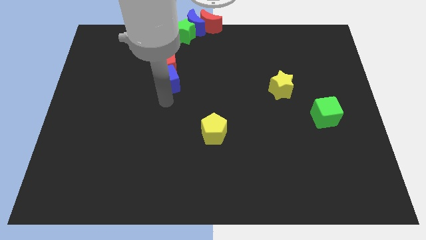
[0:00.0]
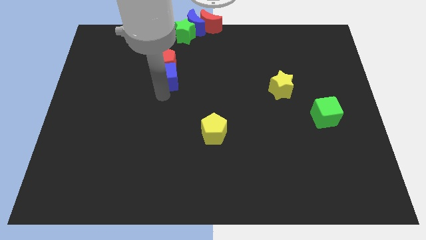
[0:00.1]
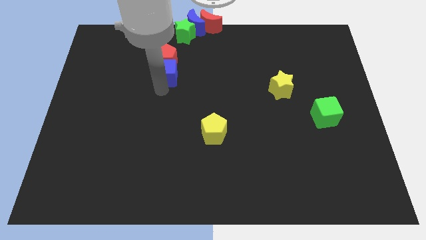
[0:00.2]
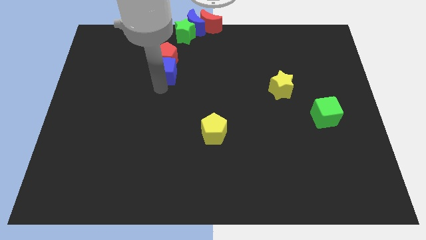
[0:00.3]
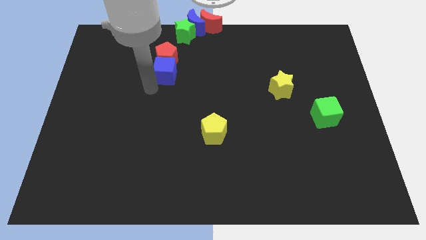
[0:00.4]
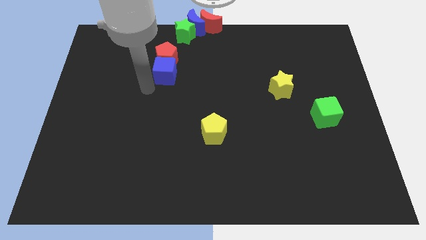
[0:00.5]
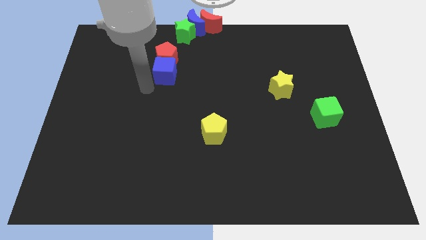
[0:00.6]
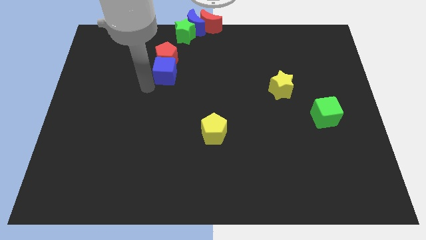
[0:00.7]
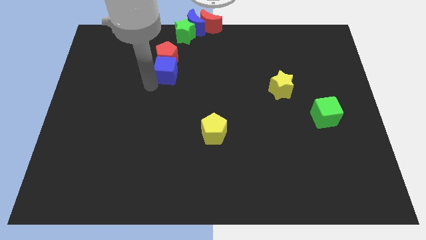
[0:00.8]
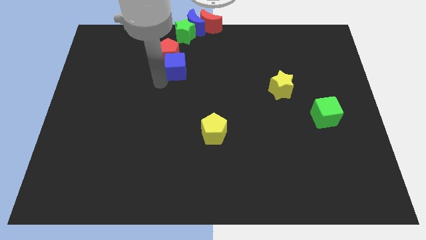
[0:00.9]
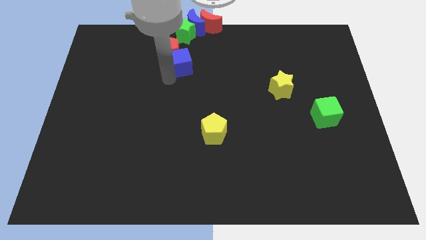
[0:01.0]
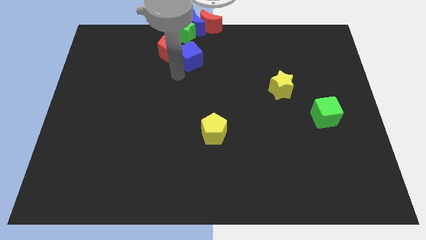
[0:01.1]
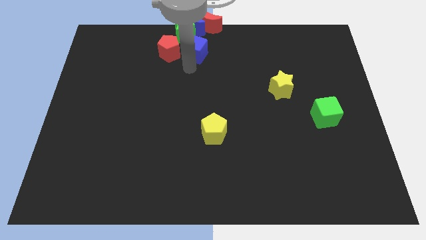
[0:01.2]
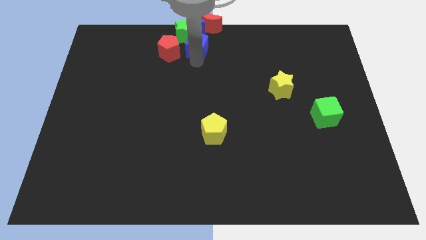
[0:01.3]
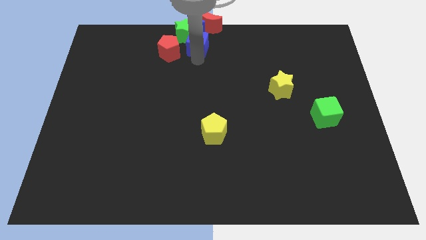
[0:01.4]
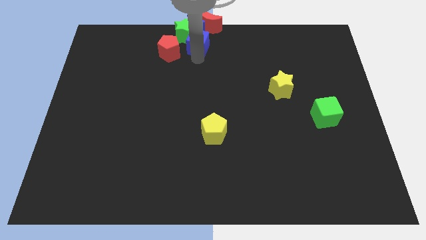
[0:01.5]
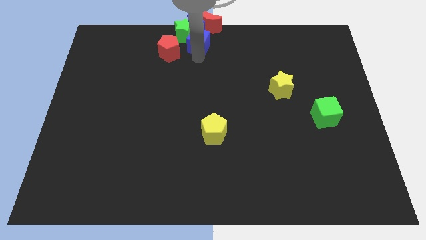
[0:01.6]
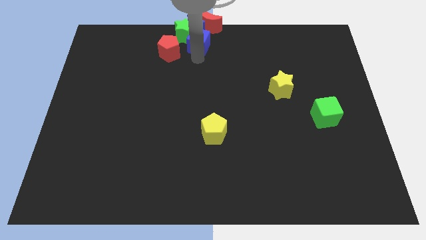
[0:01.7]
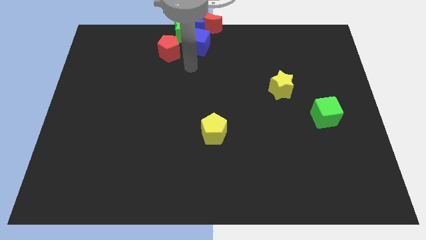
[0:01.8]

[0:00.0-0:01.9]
push blue cube below blue moon

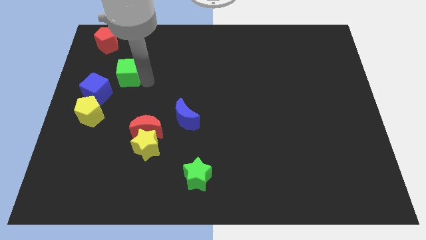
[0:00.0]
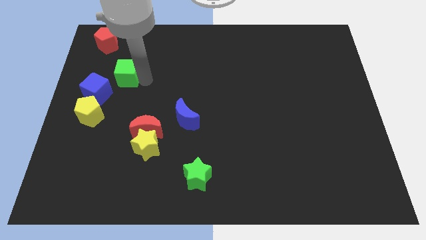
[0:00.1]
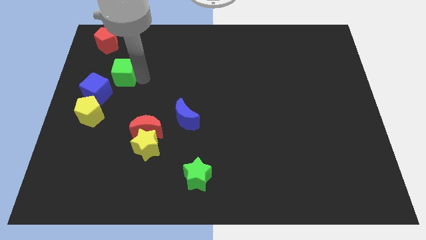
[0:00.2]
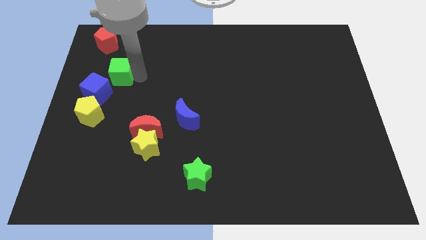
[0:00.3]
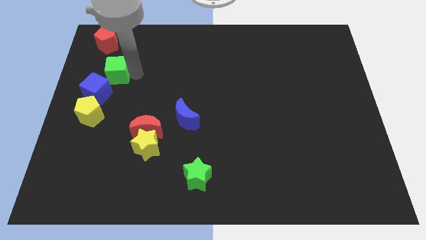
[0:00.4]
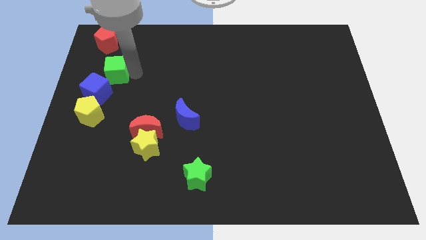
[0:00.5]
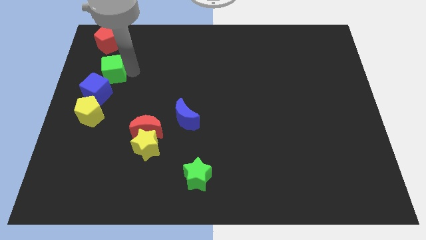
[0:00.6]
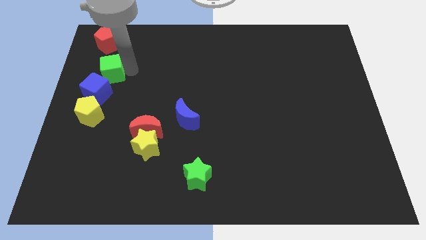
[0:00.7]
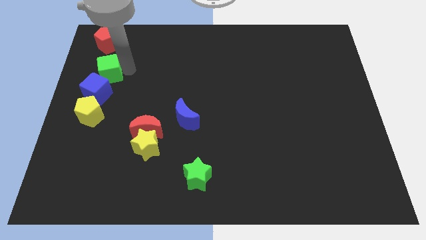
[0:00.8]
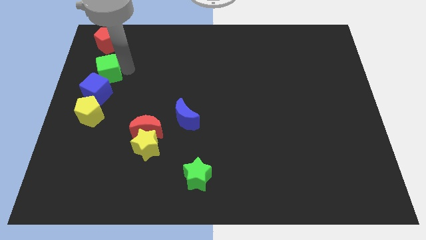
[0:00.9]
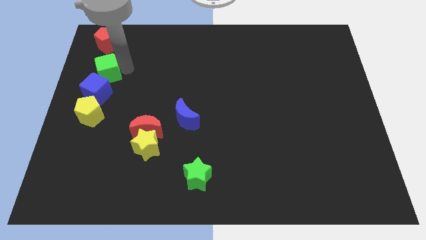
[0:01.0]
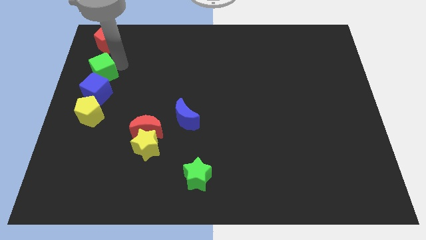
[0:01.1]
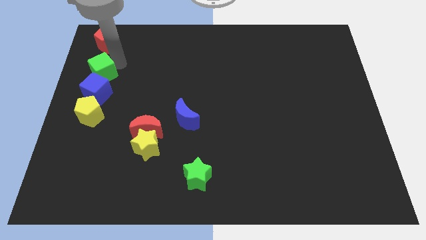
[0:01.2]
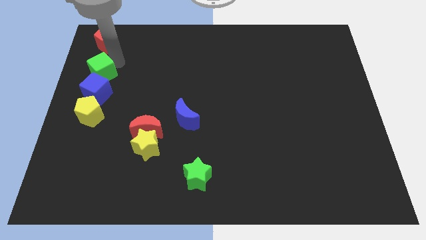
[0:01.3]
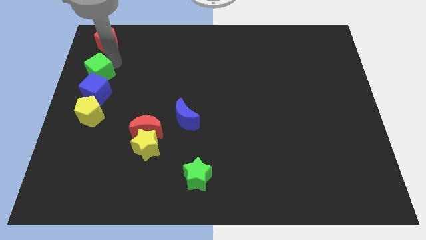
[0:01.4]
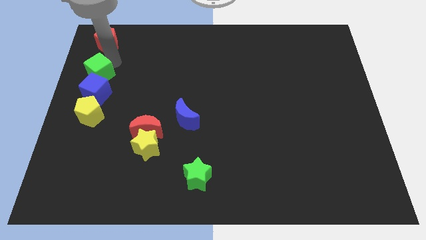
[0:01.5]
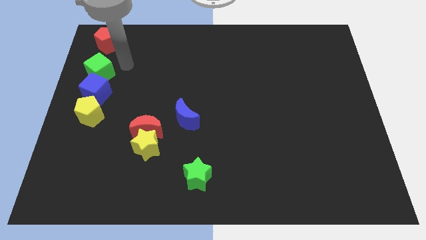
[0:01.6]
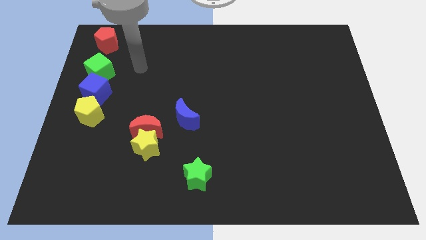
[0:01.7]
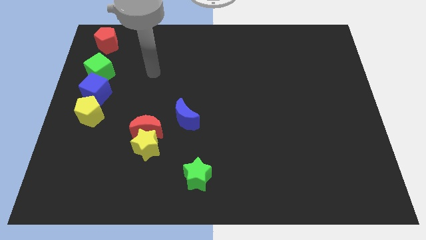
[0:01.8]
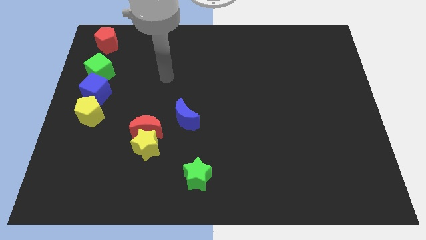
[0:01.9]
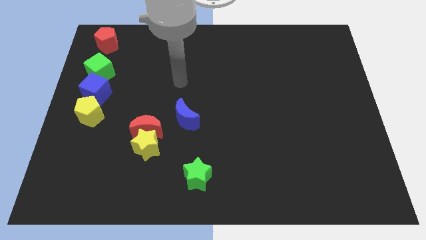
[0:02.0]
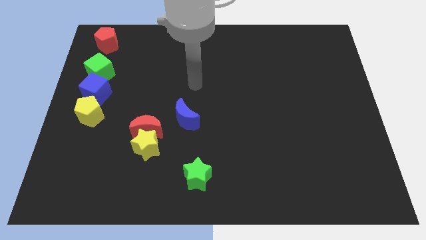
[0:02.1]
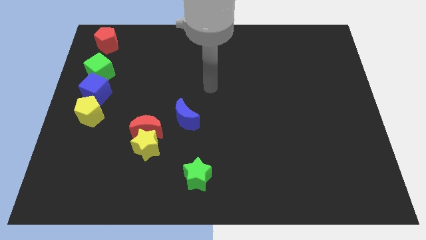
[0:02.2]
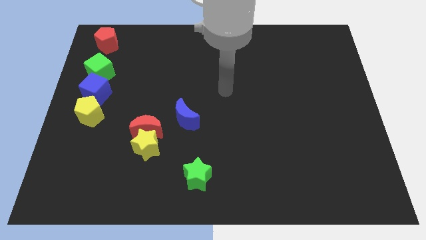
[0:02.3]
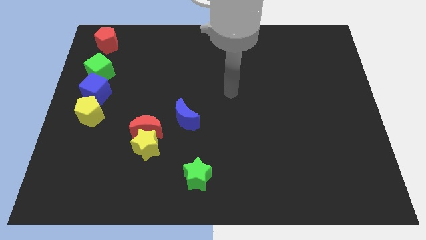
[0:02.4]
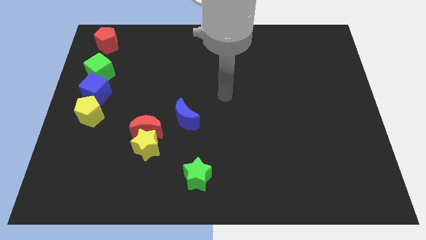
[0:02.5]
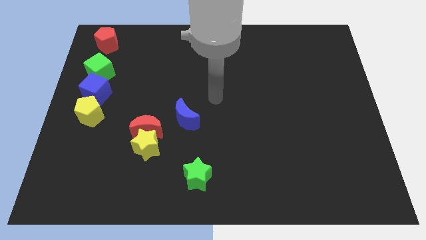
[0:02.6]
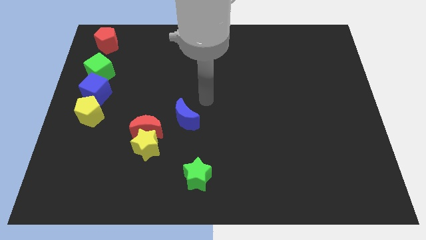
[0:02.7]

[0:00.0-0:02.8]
put the green cube at the top of the blue cube and go away

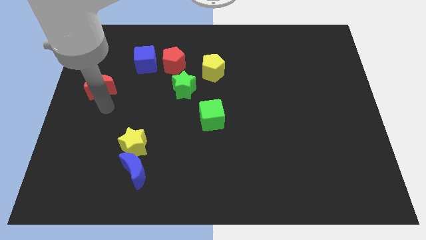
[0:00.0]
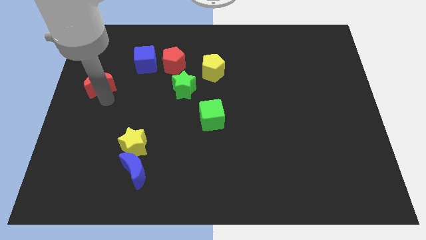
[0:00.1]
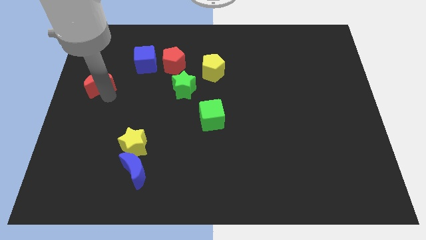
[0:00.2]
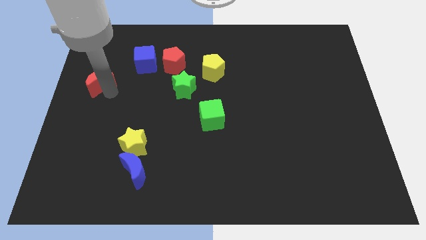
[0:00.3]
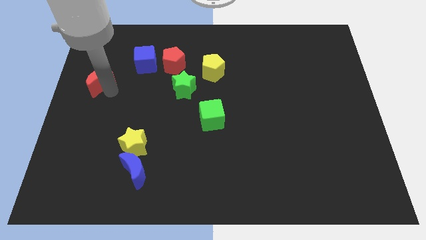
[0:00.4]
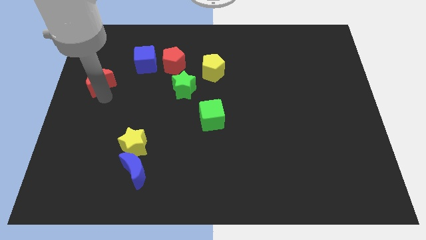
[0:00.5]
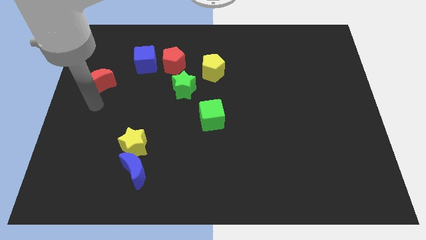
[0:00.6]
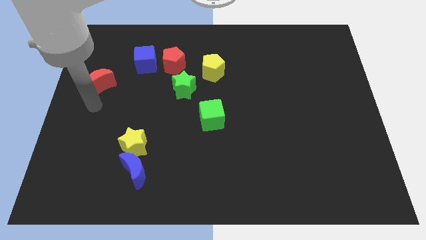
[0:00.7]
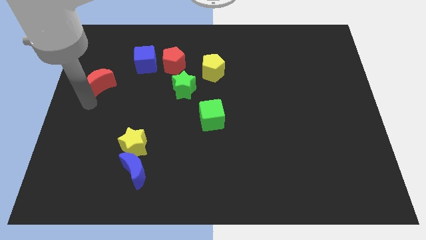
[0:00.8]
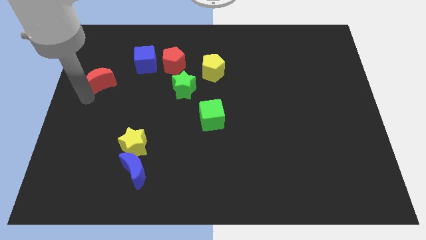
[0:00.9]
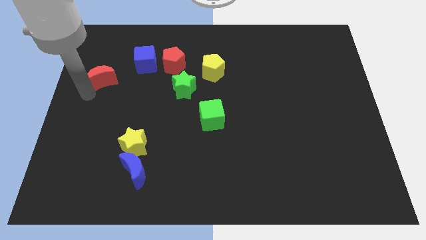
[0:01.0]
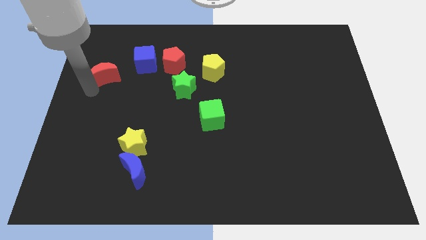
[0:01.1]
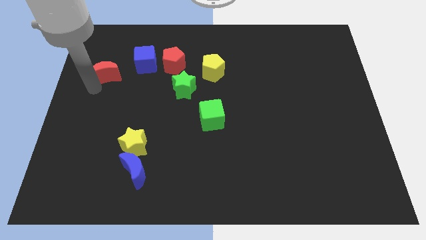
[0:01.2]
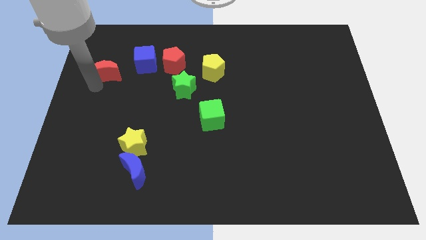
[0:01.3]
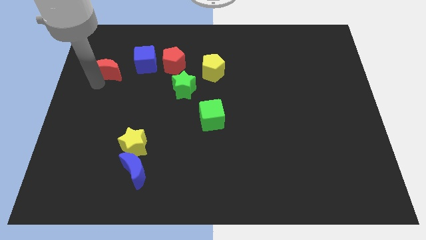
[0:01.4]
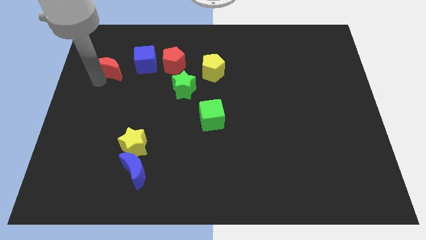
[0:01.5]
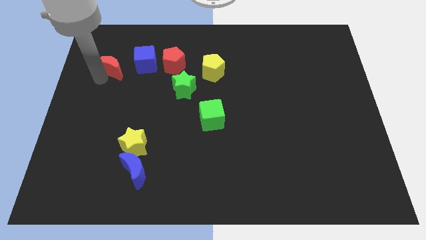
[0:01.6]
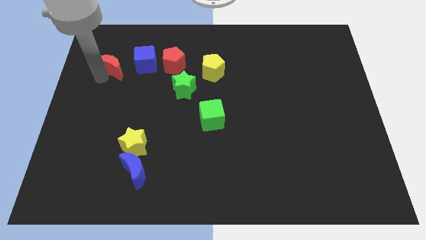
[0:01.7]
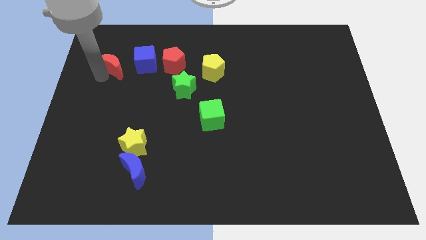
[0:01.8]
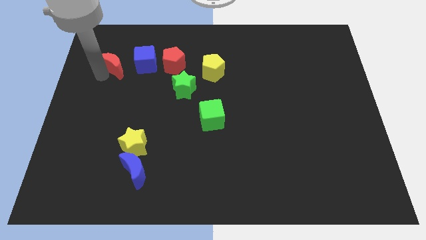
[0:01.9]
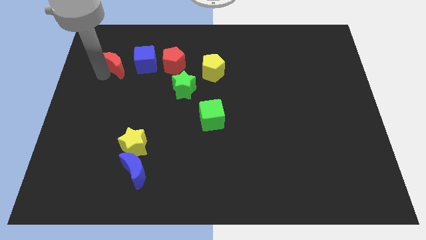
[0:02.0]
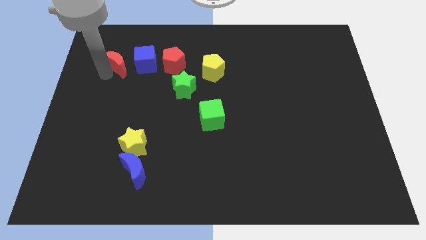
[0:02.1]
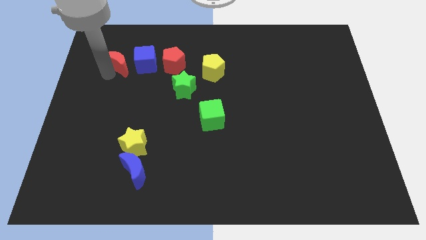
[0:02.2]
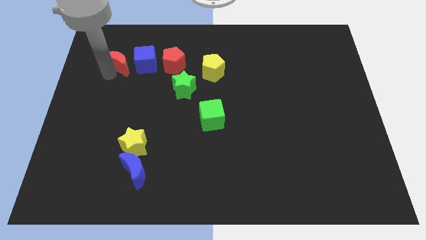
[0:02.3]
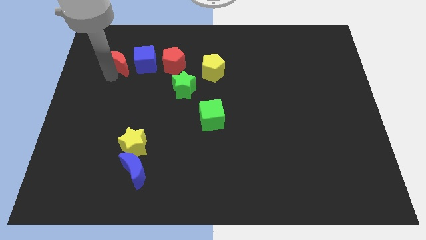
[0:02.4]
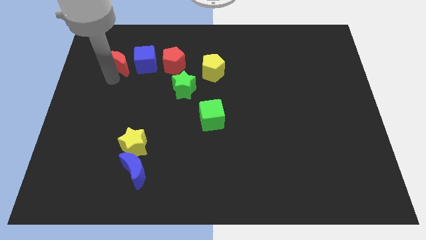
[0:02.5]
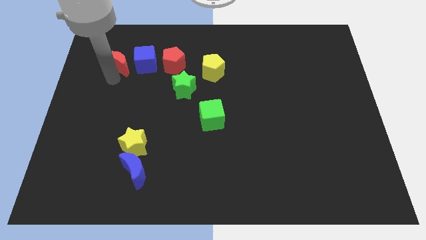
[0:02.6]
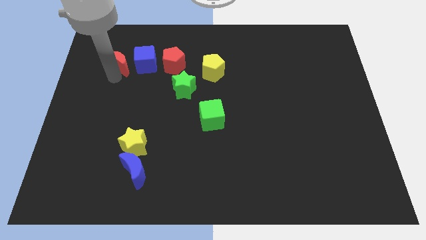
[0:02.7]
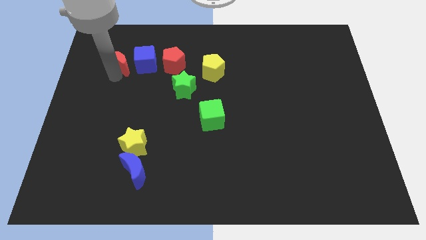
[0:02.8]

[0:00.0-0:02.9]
put the red crescent to the left of the blue cube

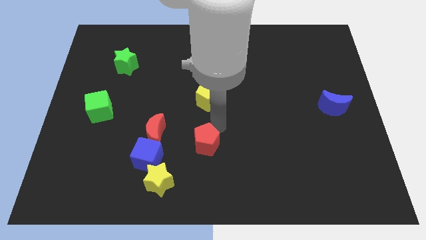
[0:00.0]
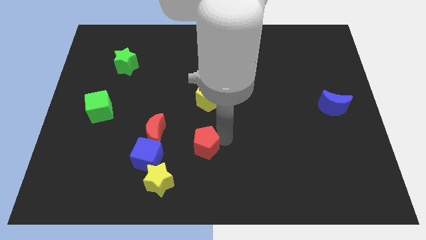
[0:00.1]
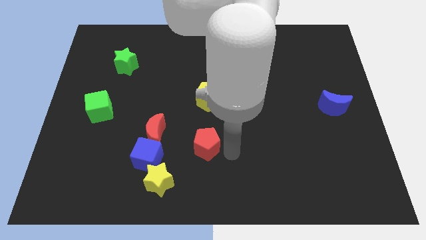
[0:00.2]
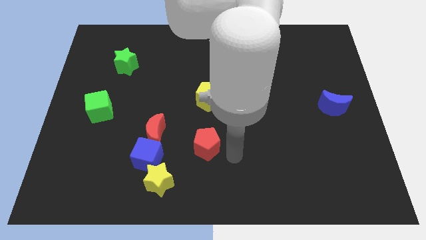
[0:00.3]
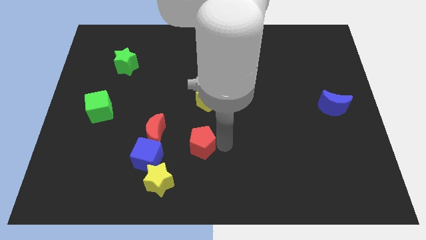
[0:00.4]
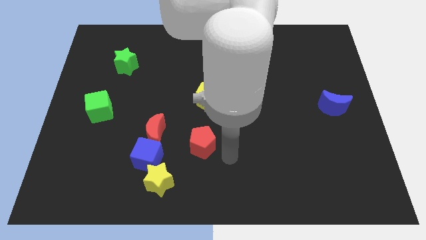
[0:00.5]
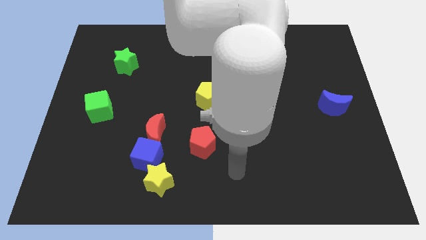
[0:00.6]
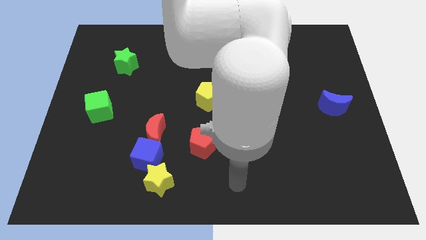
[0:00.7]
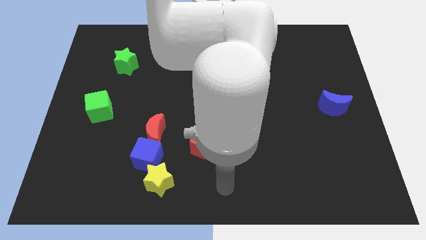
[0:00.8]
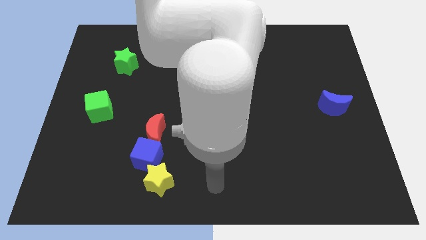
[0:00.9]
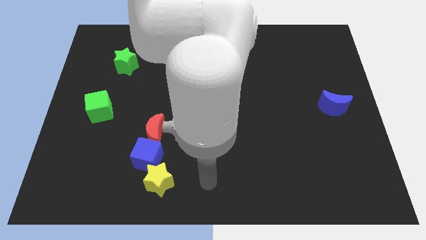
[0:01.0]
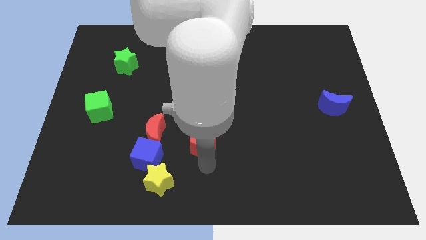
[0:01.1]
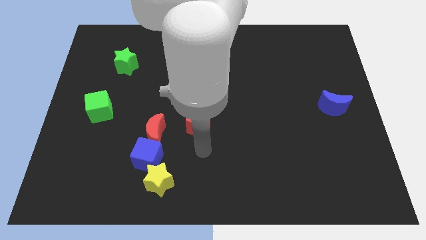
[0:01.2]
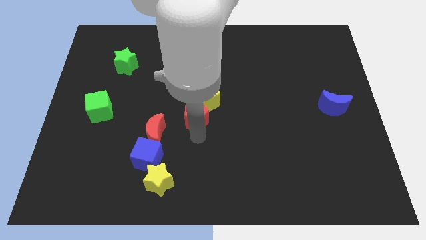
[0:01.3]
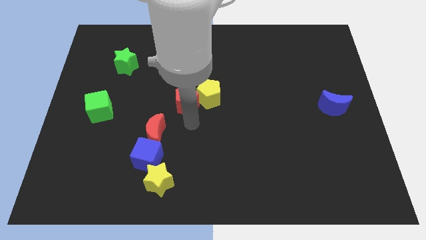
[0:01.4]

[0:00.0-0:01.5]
push the red pentagon into the yellow pentagon
